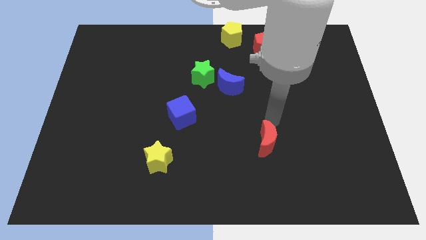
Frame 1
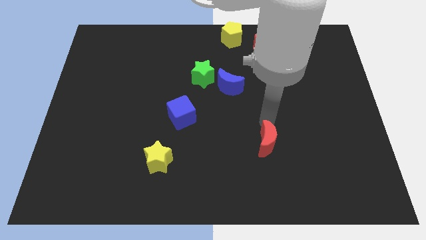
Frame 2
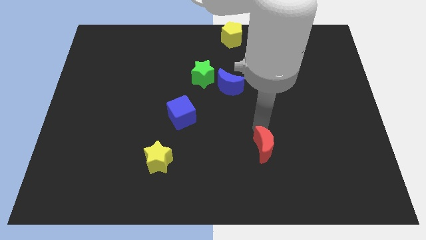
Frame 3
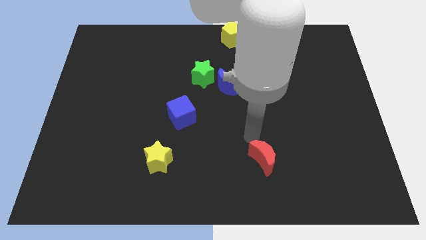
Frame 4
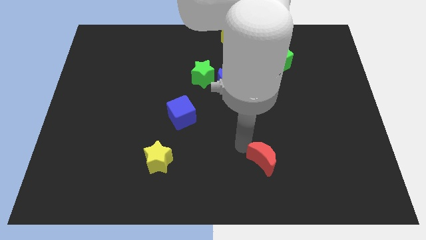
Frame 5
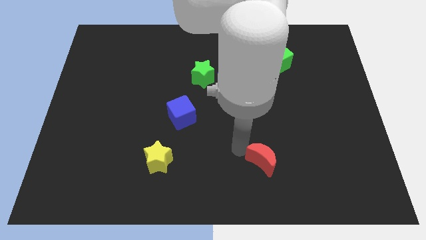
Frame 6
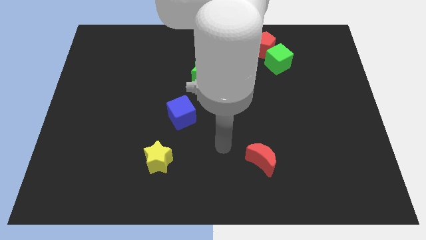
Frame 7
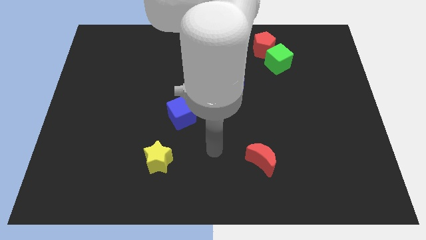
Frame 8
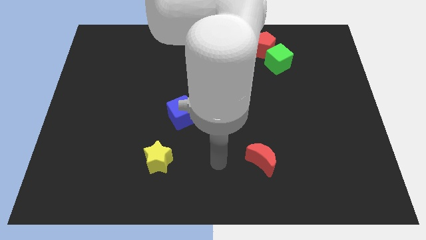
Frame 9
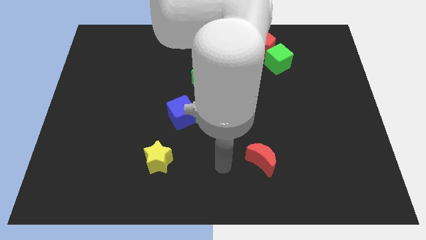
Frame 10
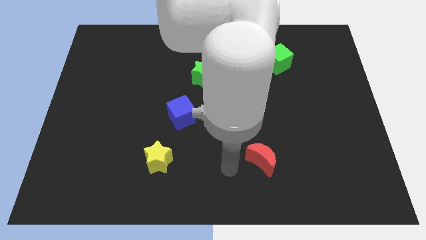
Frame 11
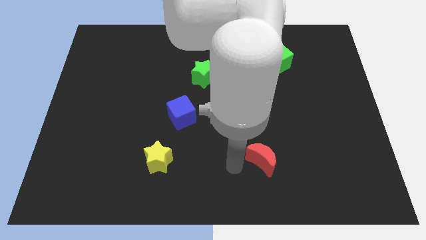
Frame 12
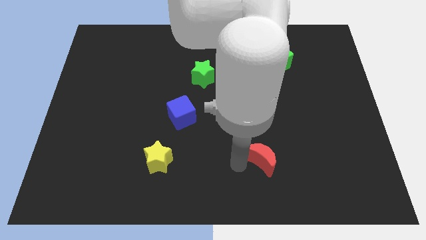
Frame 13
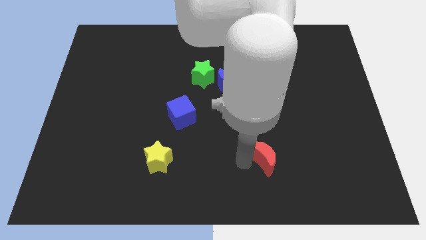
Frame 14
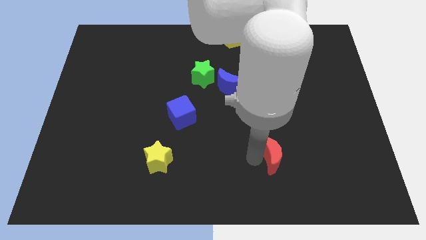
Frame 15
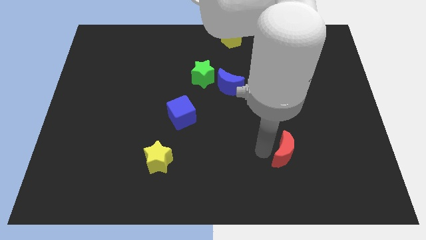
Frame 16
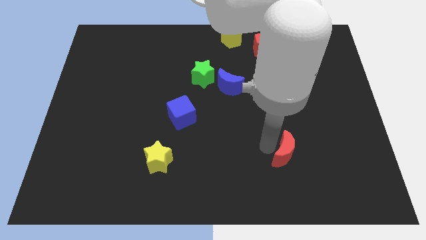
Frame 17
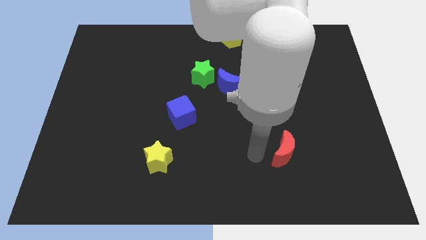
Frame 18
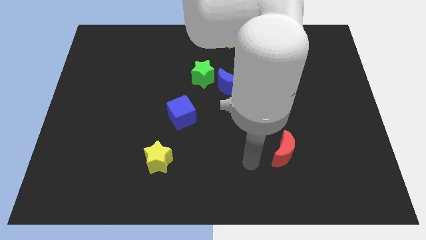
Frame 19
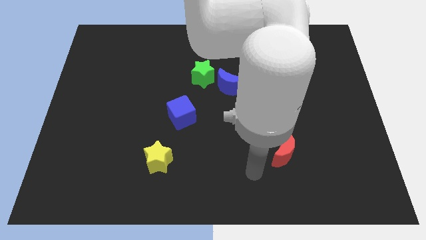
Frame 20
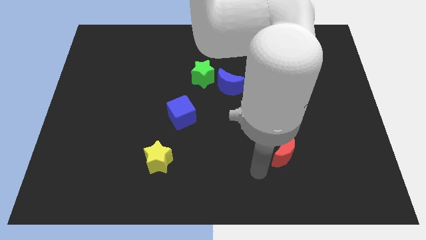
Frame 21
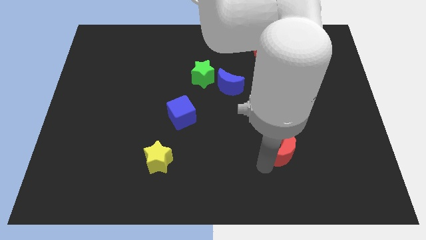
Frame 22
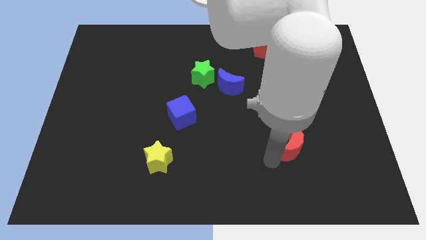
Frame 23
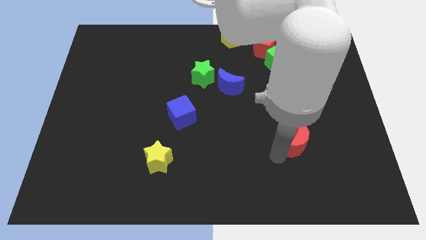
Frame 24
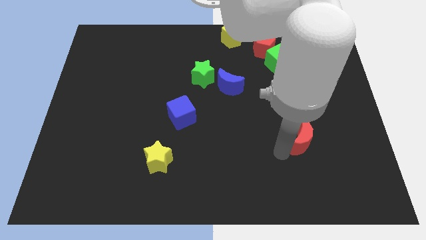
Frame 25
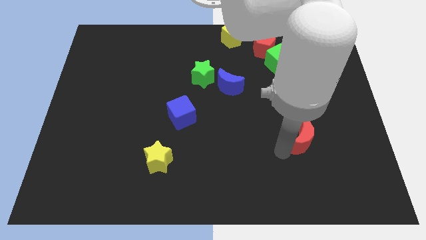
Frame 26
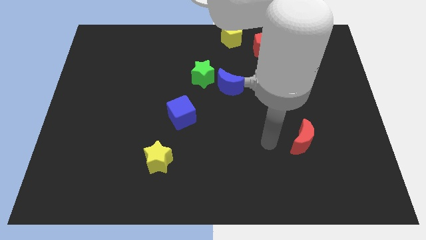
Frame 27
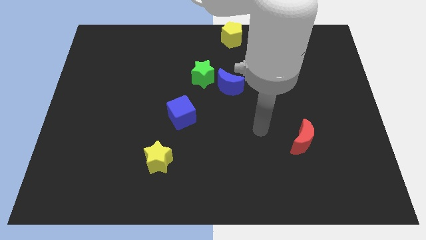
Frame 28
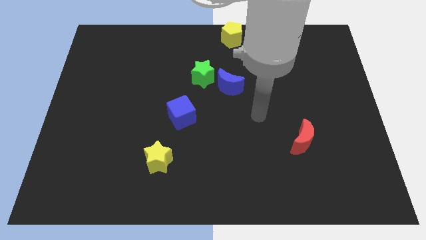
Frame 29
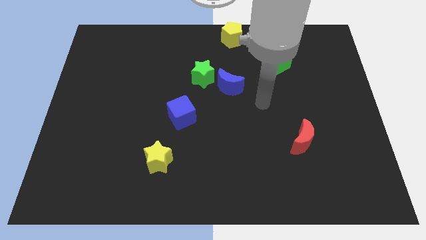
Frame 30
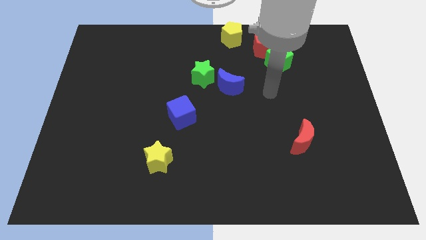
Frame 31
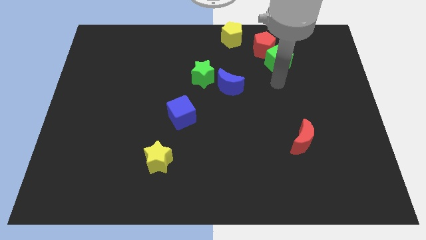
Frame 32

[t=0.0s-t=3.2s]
push the red crescent towards the center right

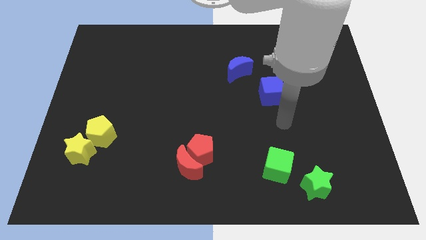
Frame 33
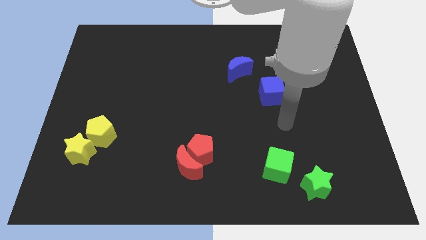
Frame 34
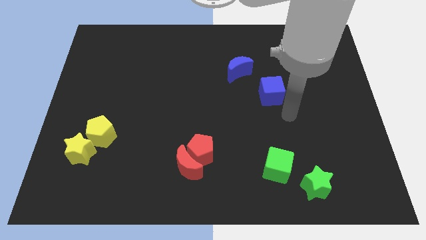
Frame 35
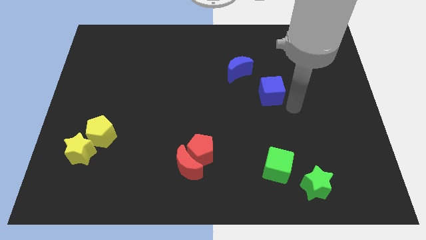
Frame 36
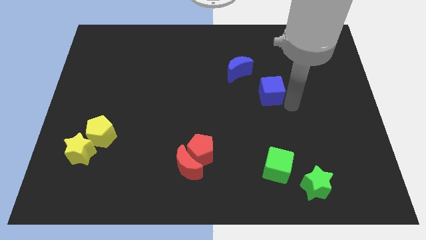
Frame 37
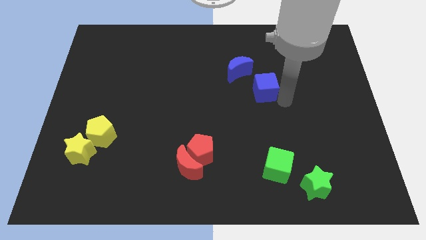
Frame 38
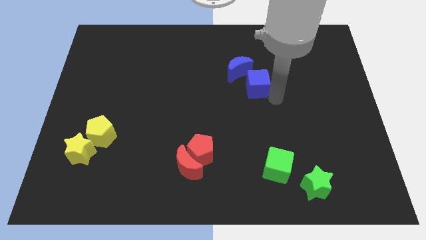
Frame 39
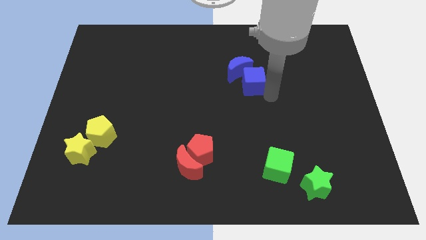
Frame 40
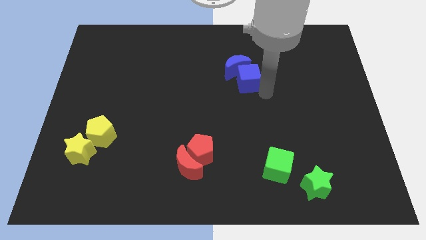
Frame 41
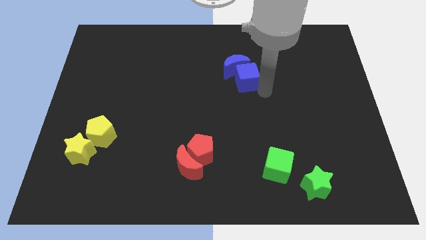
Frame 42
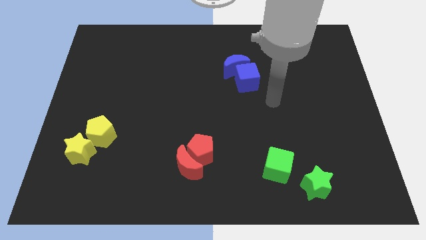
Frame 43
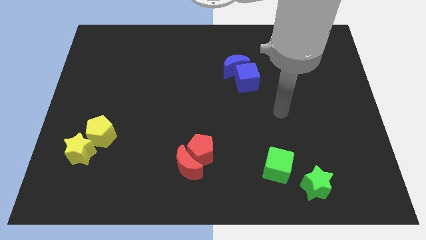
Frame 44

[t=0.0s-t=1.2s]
push the blue cube into the blue moon

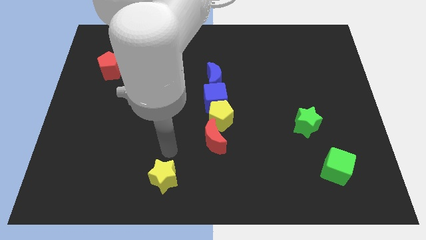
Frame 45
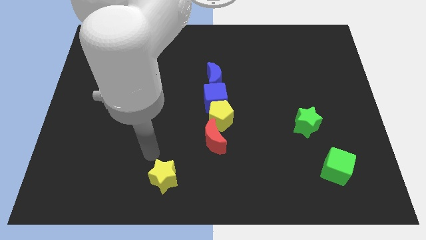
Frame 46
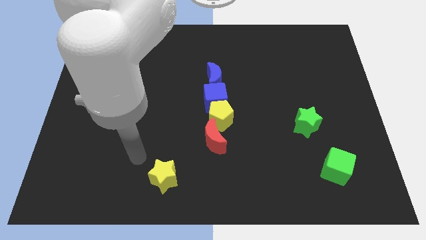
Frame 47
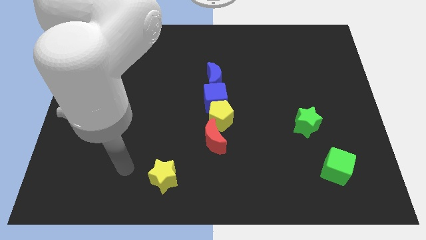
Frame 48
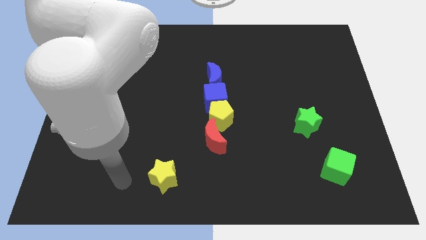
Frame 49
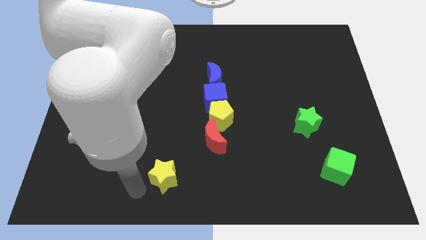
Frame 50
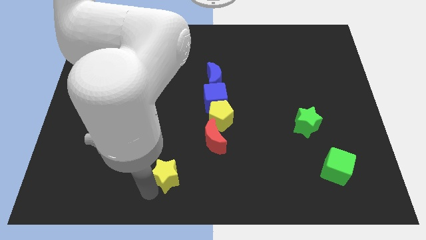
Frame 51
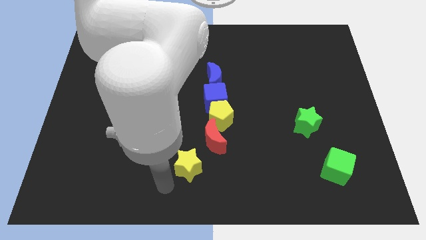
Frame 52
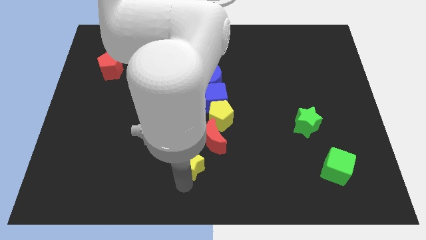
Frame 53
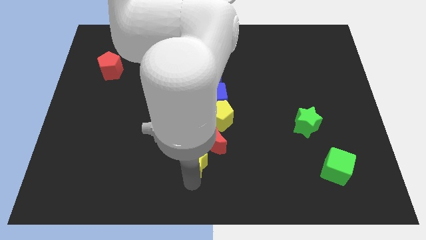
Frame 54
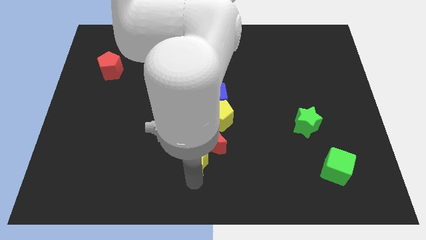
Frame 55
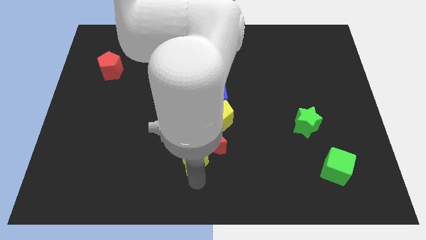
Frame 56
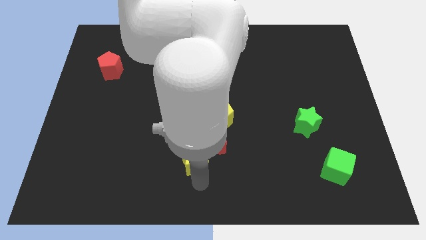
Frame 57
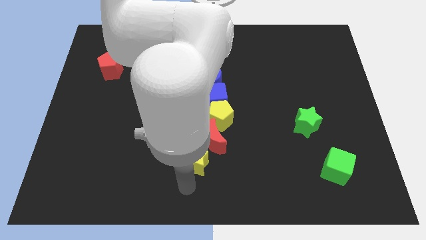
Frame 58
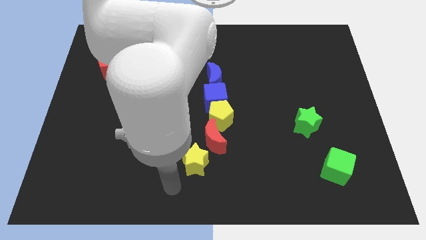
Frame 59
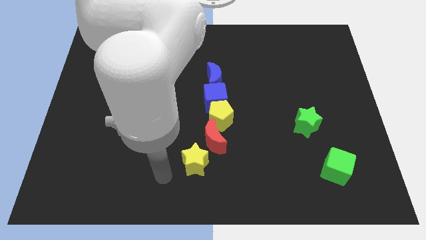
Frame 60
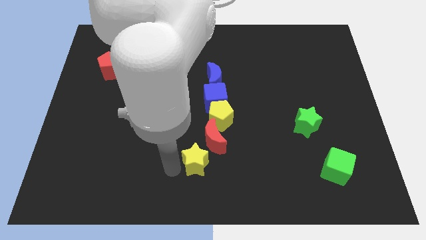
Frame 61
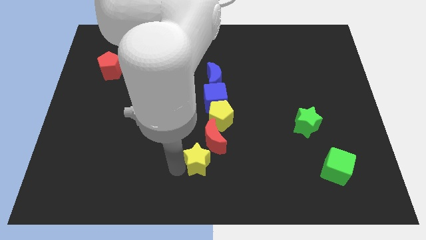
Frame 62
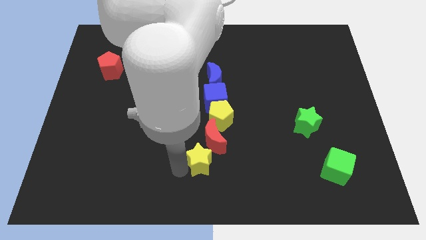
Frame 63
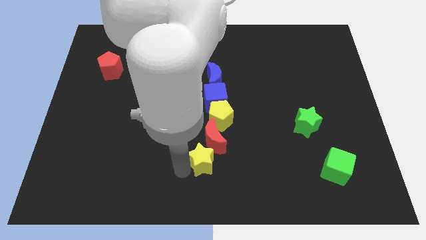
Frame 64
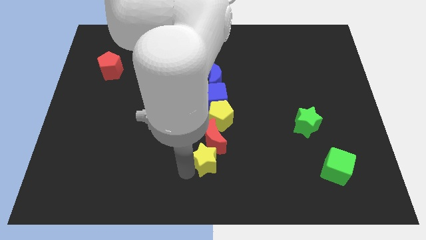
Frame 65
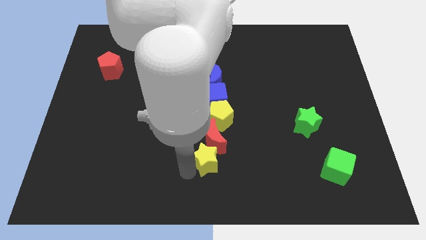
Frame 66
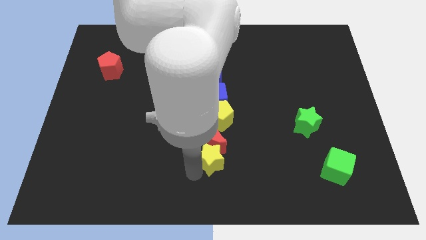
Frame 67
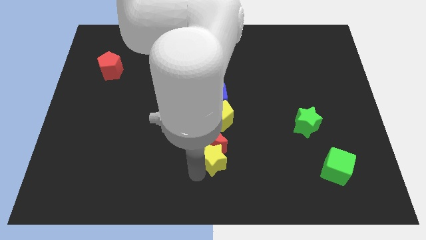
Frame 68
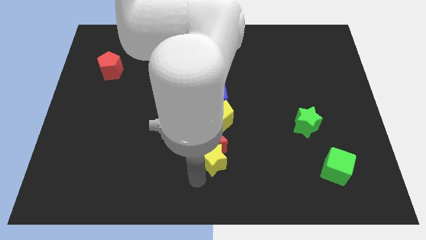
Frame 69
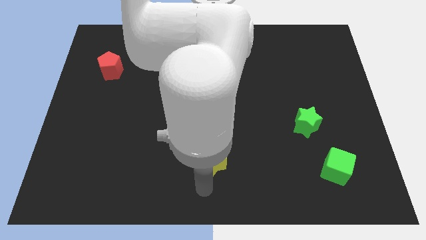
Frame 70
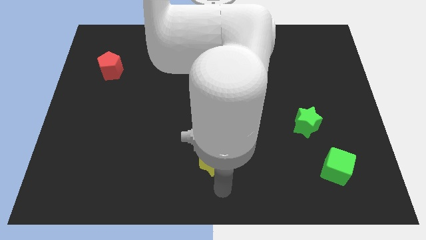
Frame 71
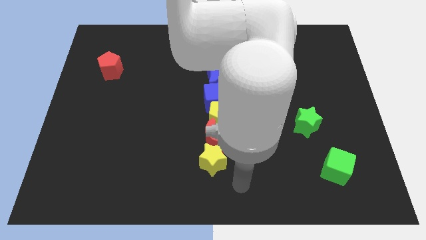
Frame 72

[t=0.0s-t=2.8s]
place the yellow star below red crescent in a line

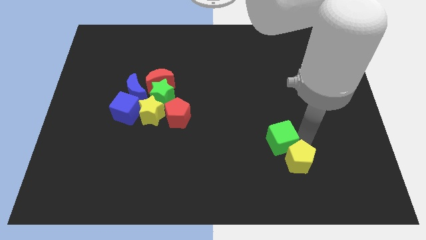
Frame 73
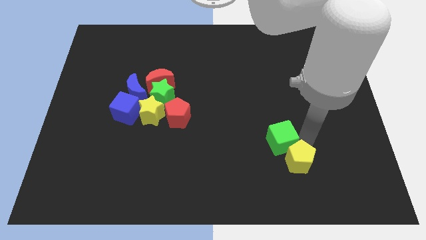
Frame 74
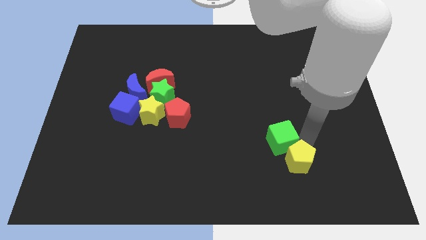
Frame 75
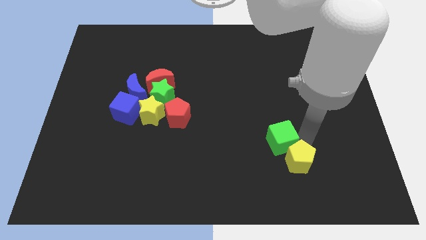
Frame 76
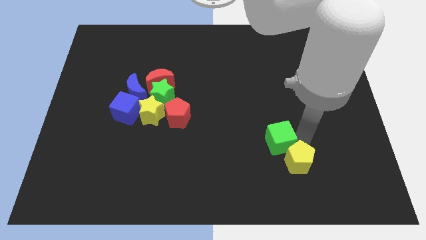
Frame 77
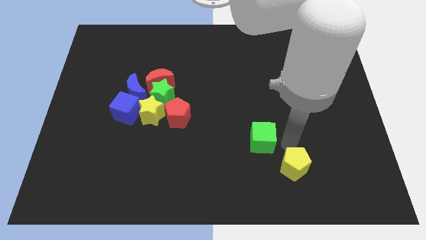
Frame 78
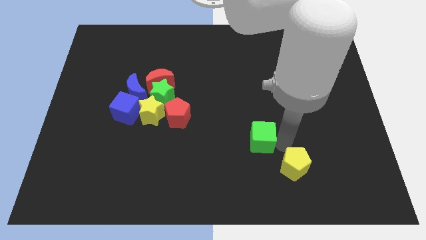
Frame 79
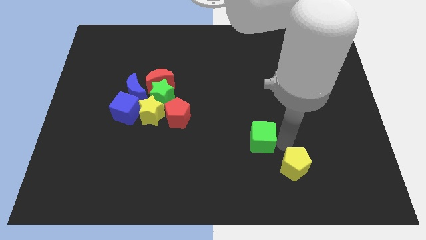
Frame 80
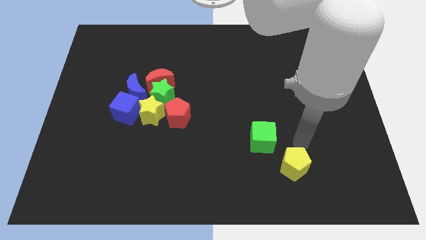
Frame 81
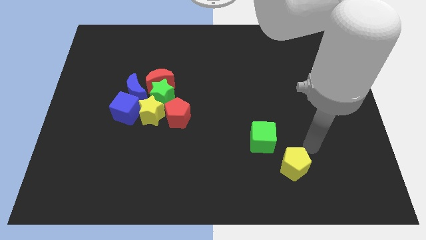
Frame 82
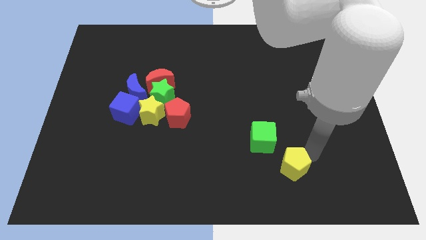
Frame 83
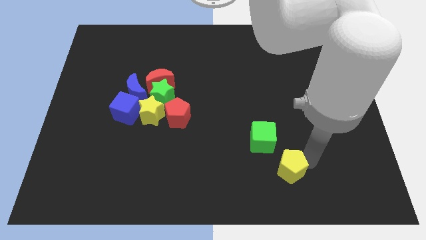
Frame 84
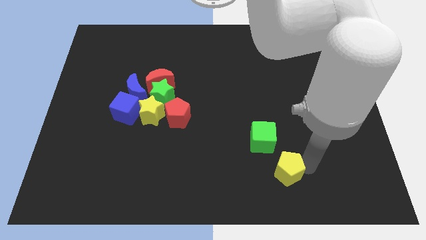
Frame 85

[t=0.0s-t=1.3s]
separate the green cube and yellow pentagon

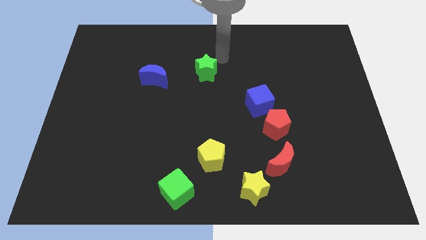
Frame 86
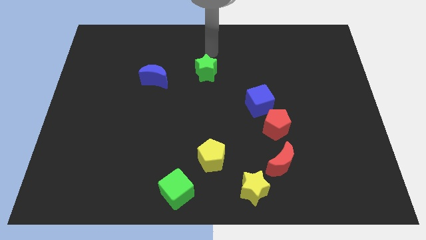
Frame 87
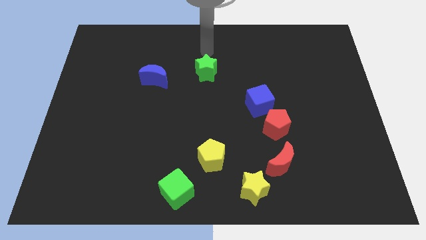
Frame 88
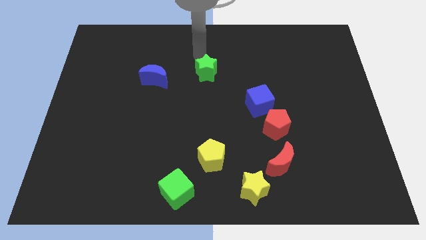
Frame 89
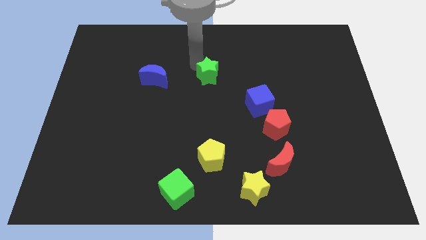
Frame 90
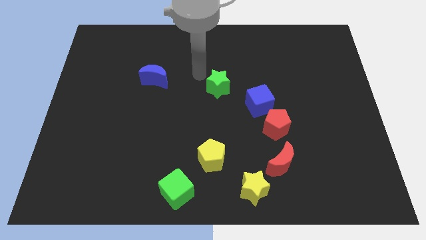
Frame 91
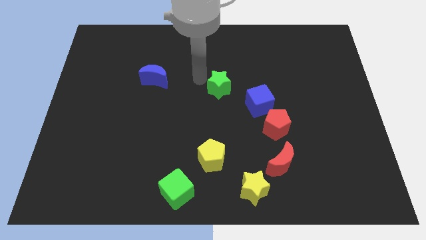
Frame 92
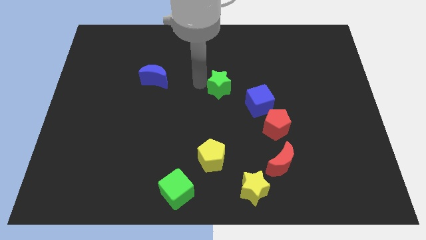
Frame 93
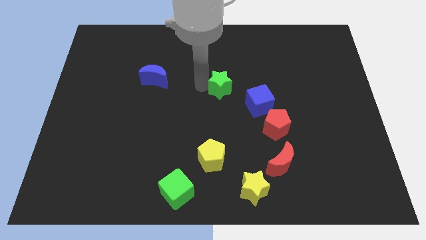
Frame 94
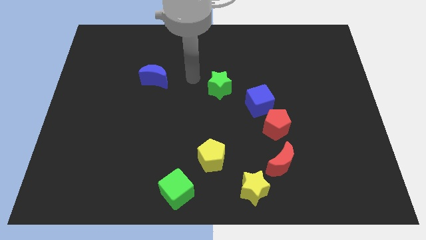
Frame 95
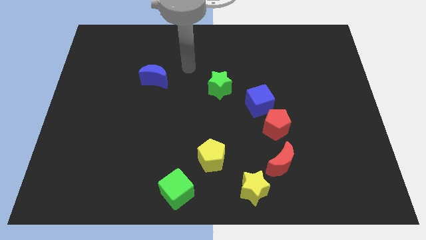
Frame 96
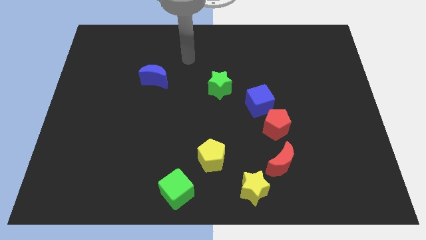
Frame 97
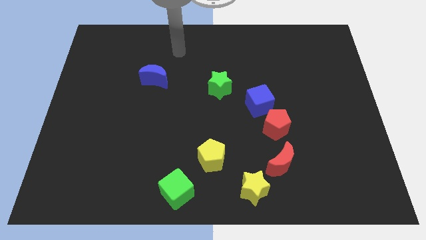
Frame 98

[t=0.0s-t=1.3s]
place the green star diagonally top left to blue cube
